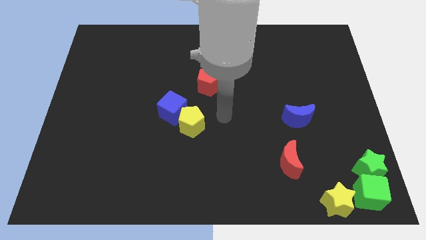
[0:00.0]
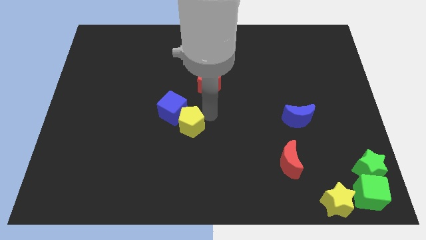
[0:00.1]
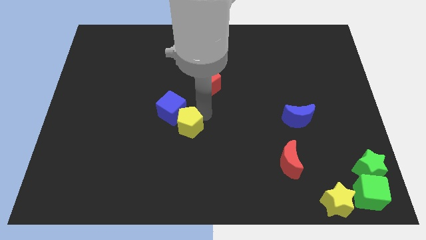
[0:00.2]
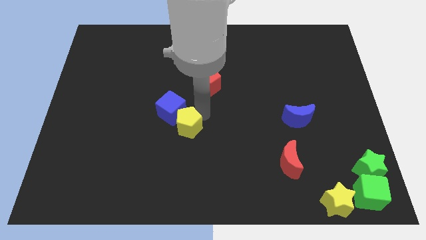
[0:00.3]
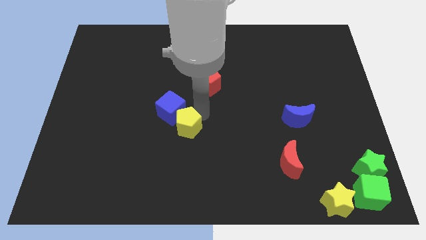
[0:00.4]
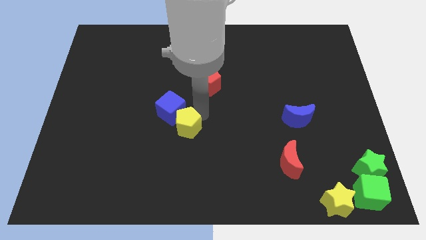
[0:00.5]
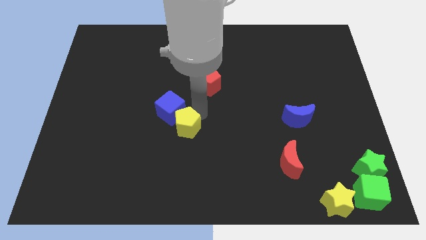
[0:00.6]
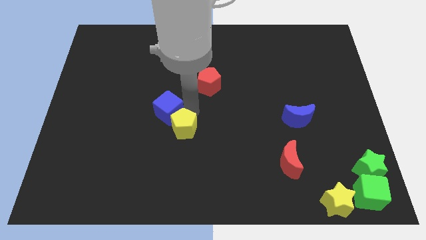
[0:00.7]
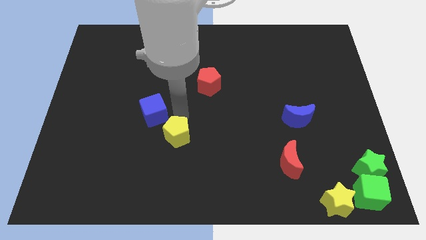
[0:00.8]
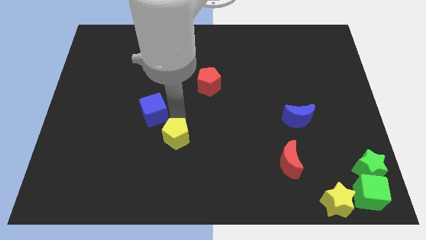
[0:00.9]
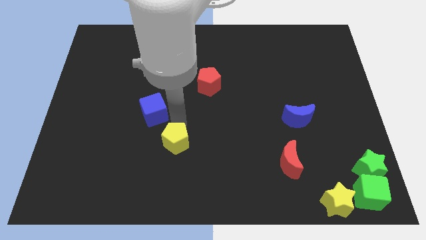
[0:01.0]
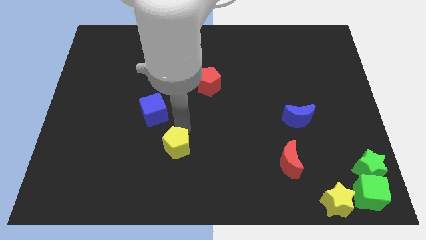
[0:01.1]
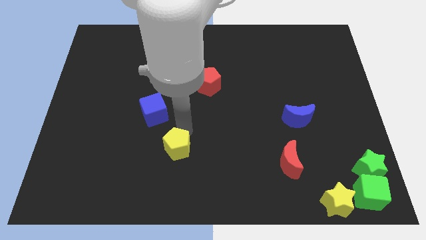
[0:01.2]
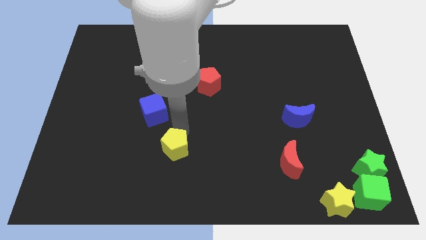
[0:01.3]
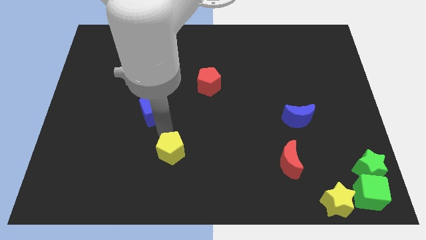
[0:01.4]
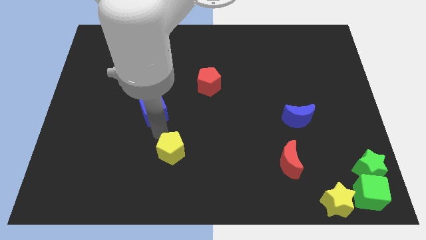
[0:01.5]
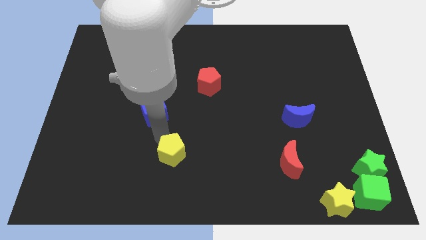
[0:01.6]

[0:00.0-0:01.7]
separate the yellow pentagon from the blue cube

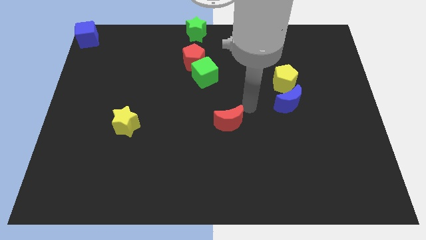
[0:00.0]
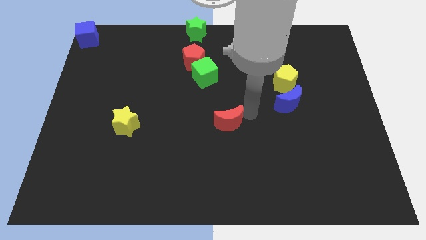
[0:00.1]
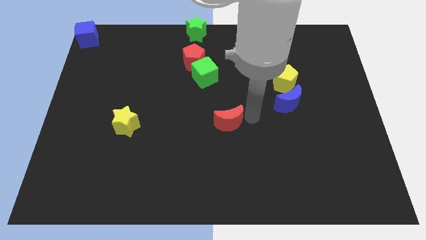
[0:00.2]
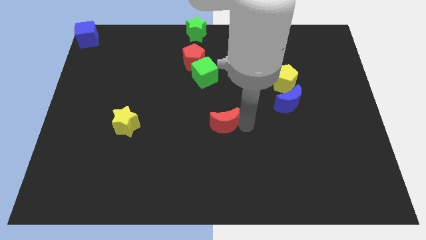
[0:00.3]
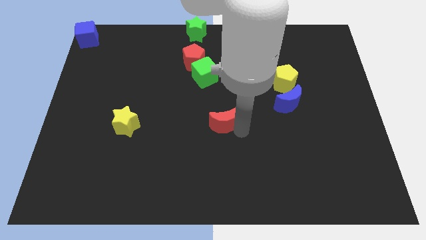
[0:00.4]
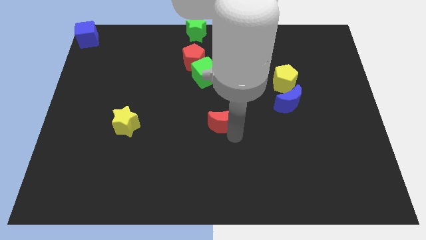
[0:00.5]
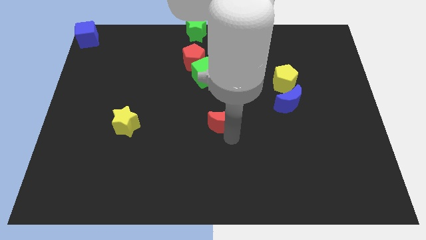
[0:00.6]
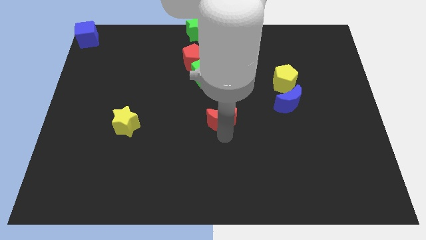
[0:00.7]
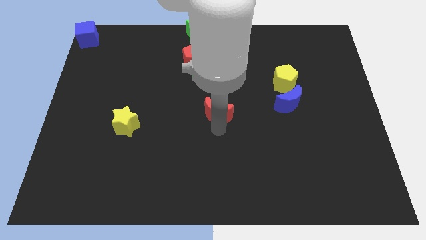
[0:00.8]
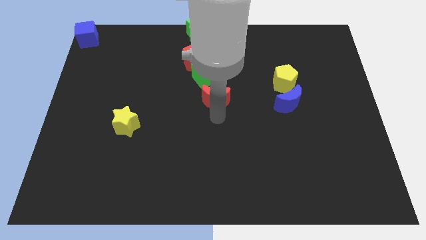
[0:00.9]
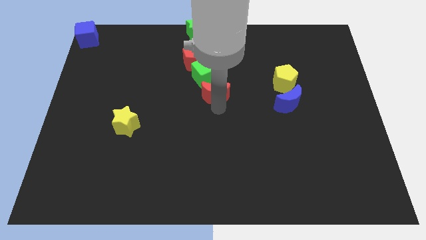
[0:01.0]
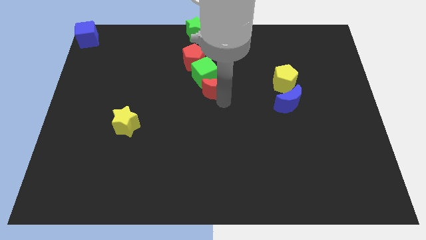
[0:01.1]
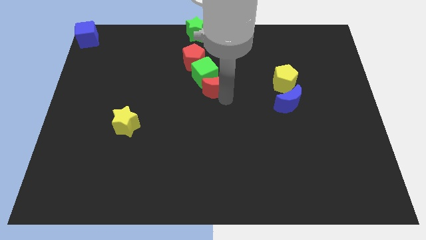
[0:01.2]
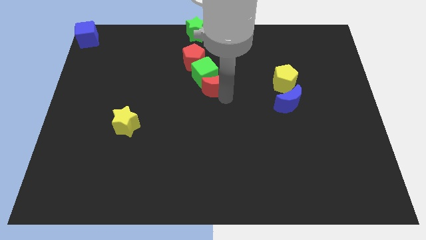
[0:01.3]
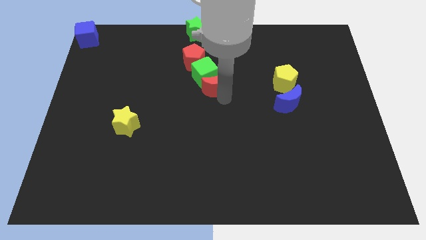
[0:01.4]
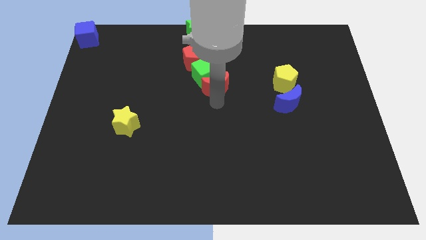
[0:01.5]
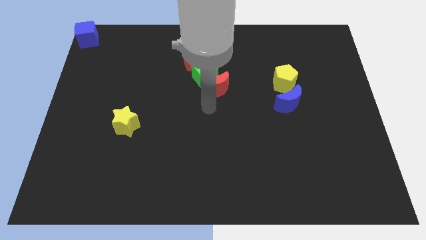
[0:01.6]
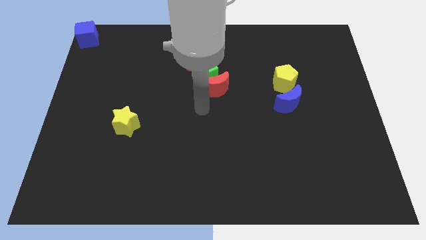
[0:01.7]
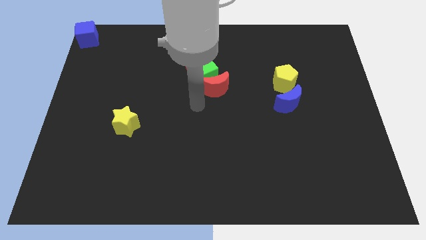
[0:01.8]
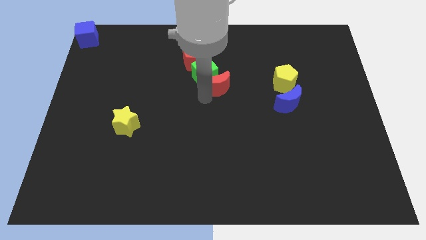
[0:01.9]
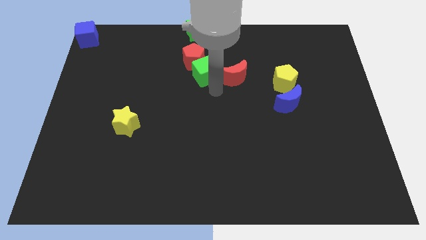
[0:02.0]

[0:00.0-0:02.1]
move the red crescent to the left side of the yellow pentagon

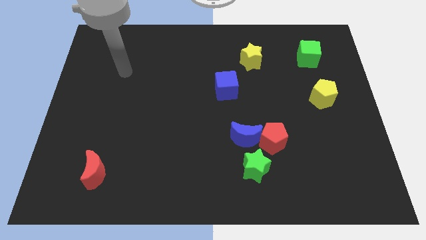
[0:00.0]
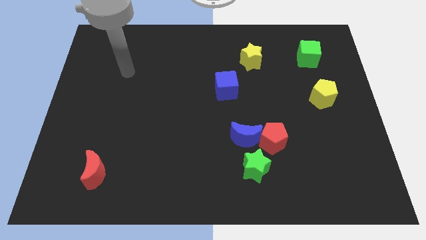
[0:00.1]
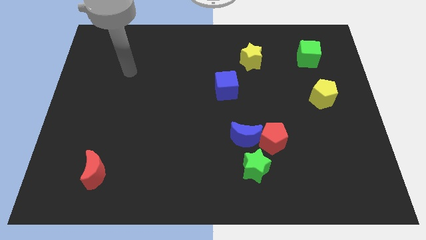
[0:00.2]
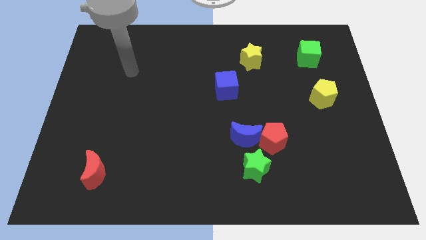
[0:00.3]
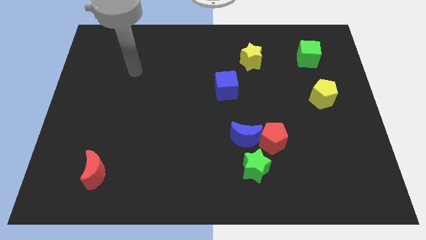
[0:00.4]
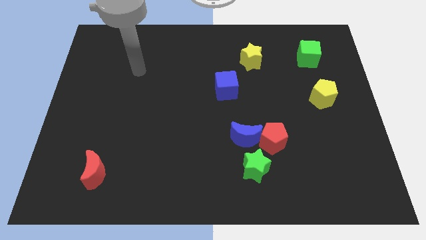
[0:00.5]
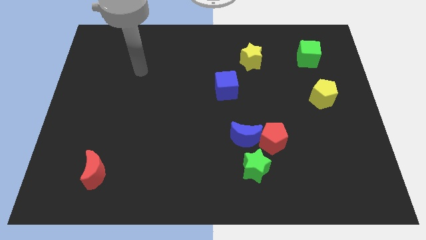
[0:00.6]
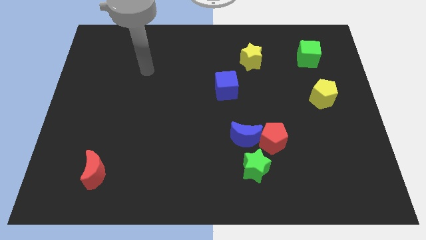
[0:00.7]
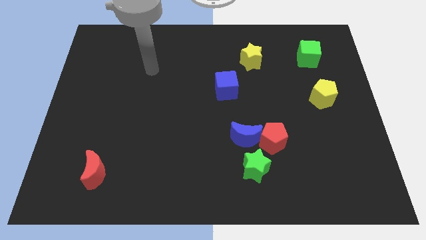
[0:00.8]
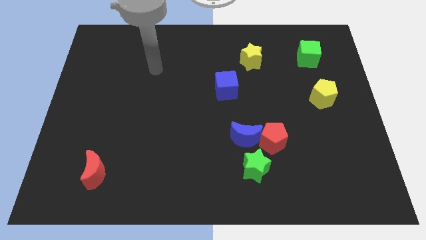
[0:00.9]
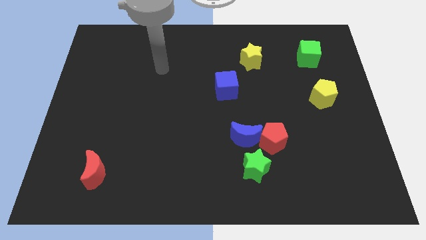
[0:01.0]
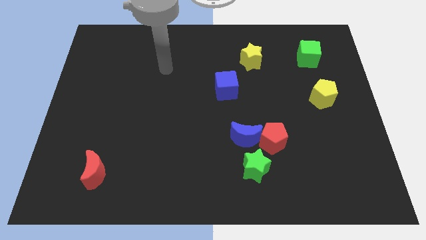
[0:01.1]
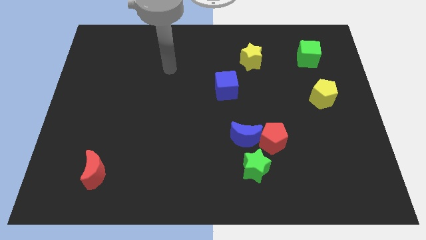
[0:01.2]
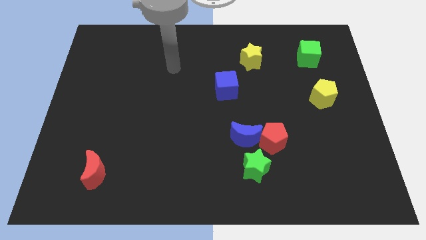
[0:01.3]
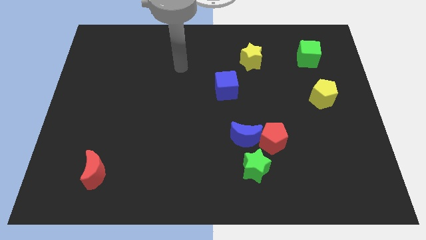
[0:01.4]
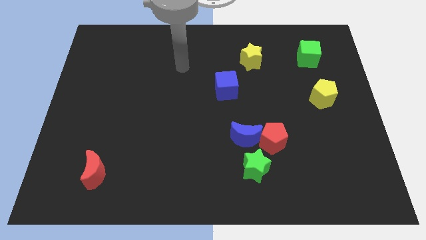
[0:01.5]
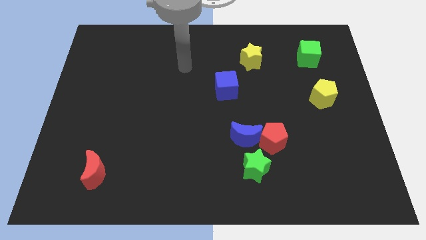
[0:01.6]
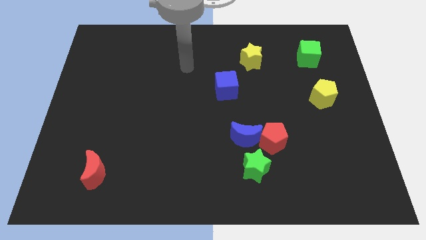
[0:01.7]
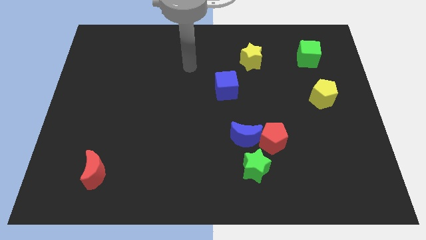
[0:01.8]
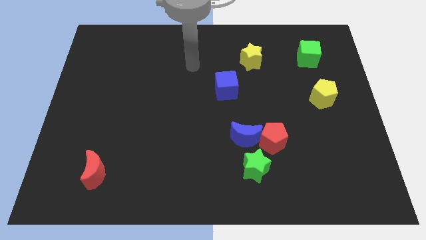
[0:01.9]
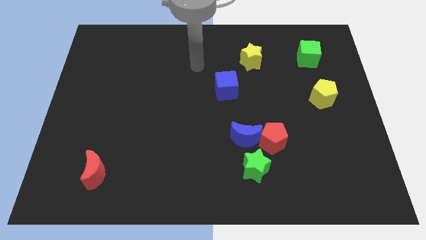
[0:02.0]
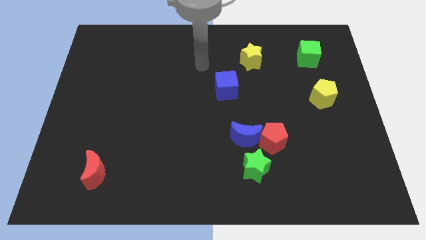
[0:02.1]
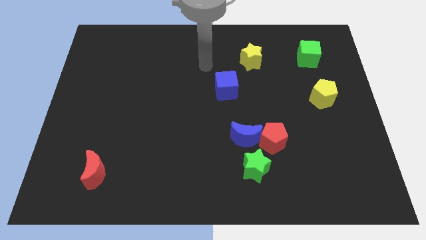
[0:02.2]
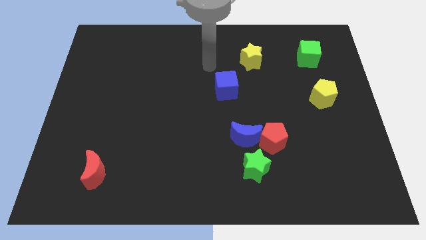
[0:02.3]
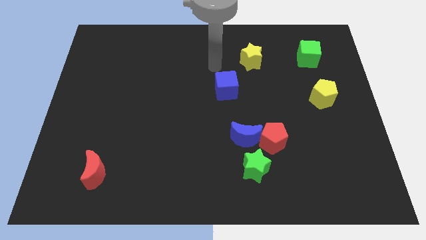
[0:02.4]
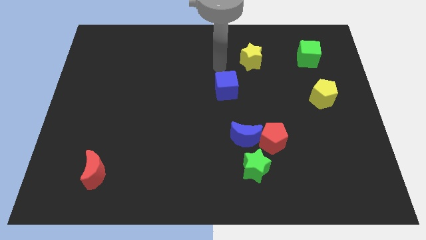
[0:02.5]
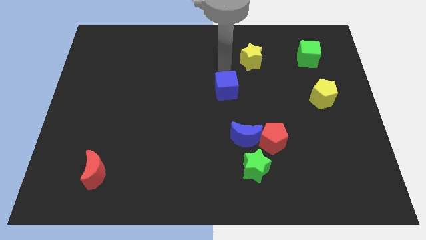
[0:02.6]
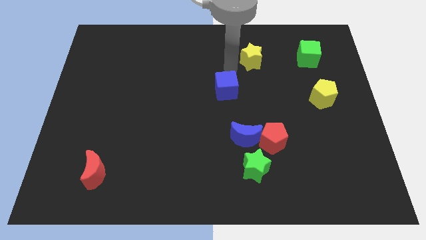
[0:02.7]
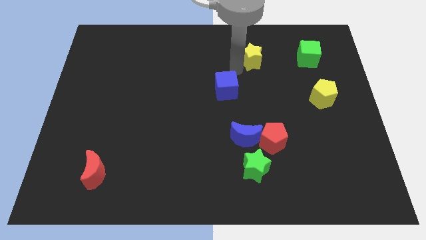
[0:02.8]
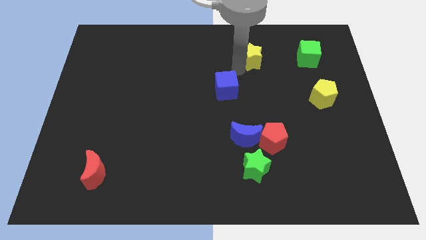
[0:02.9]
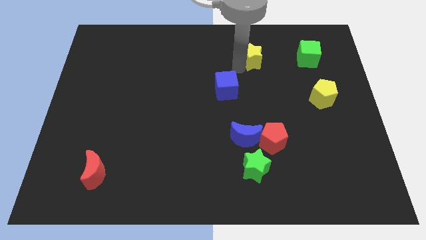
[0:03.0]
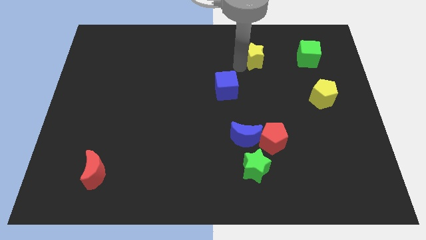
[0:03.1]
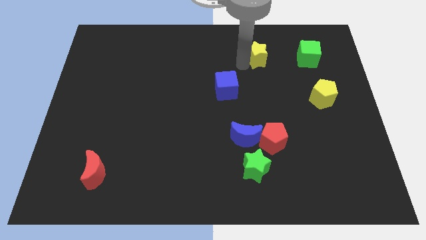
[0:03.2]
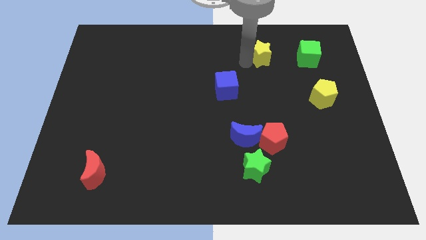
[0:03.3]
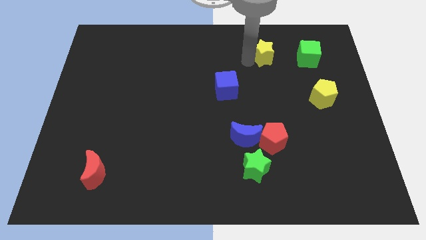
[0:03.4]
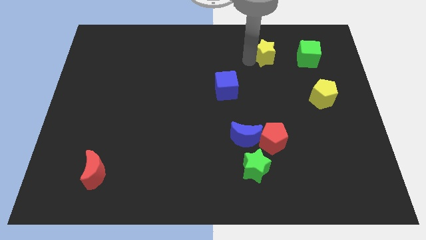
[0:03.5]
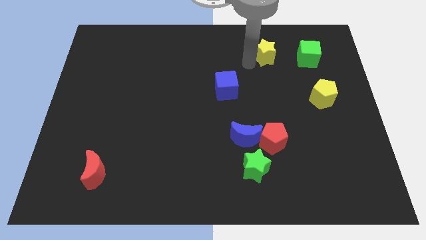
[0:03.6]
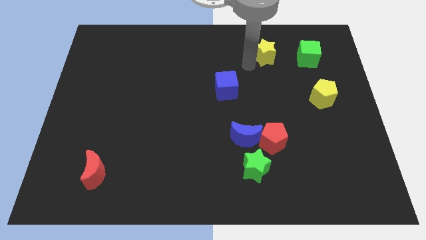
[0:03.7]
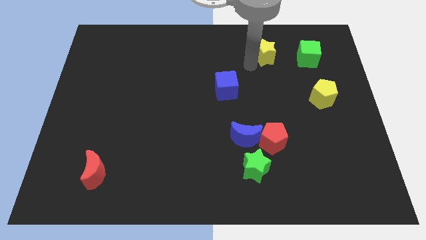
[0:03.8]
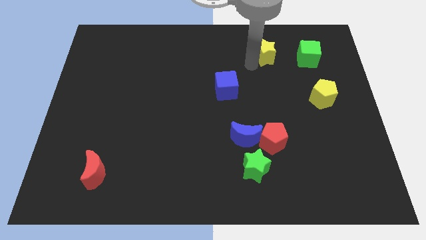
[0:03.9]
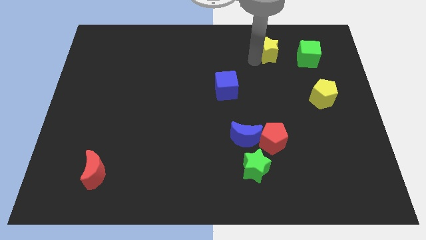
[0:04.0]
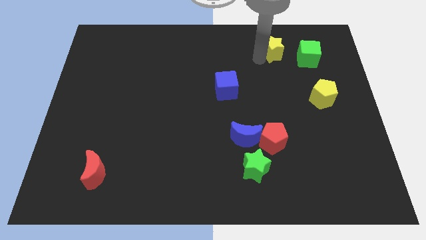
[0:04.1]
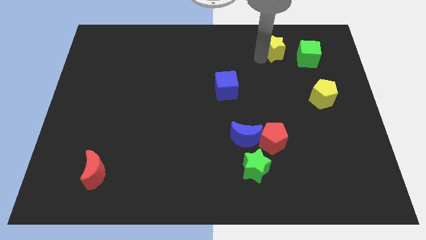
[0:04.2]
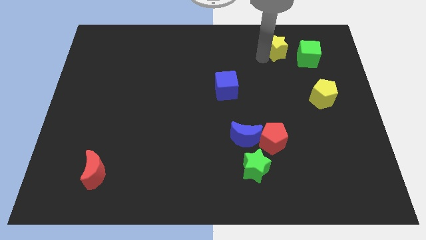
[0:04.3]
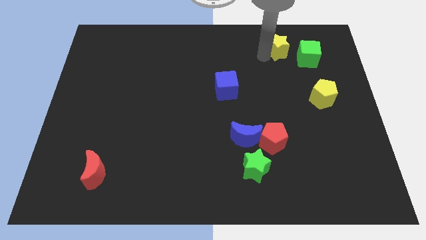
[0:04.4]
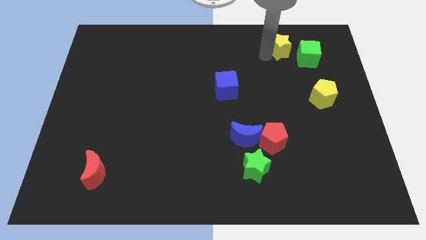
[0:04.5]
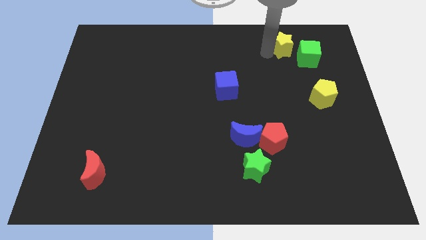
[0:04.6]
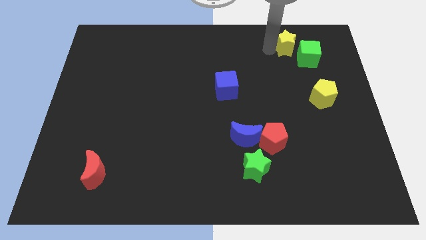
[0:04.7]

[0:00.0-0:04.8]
push the yellow star to the right of the board

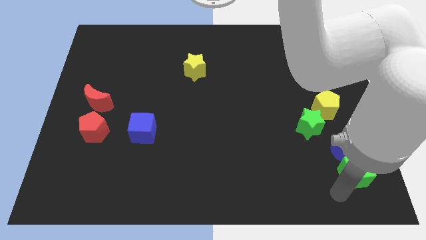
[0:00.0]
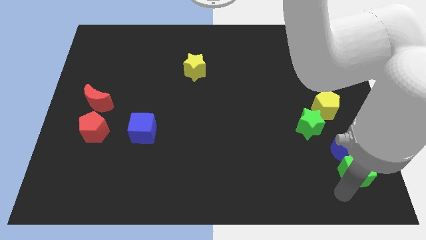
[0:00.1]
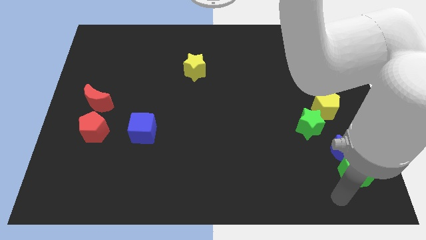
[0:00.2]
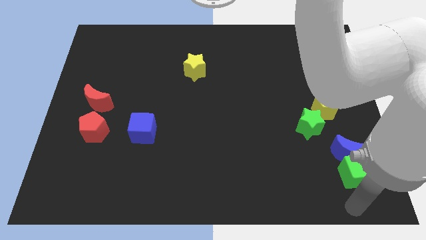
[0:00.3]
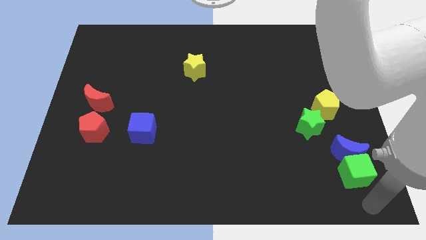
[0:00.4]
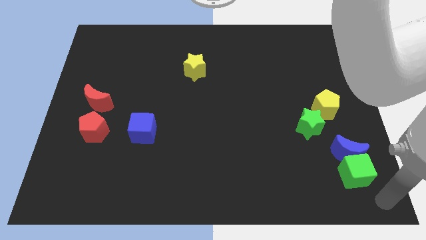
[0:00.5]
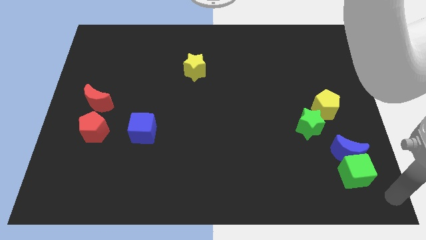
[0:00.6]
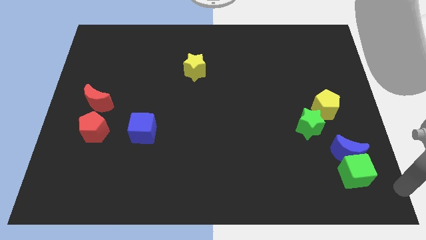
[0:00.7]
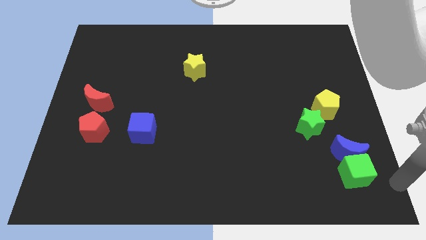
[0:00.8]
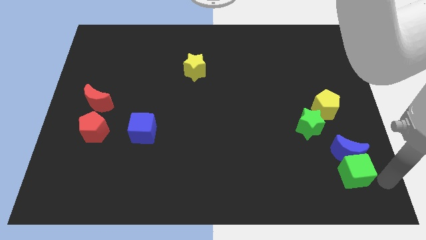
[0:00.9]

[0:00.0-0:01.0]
move your arm right to the green cube
